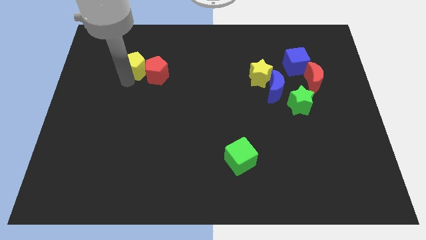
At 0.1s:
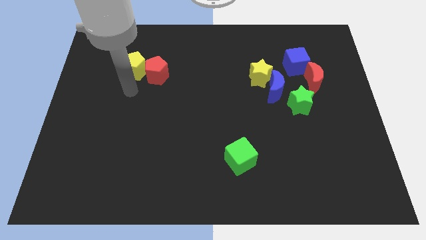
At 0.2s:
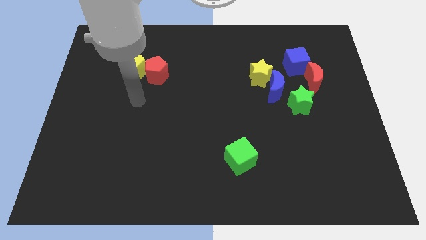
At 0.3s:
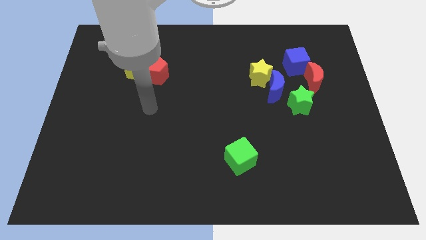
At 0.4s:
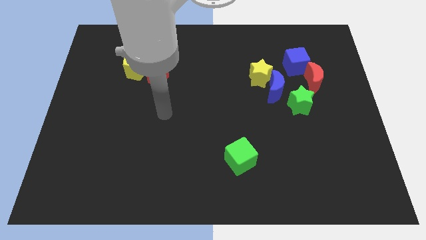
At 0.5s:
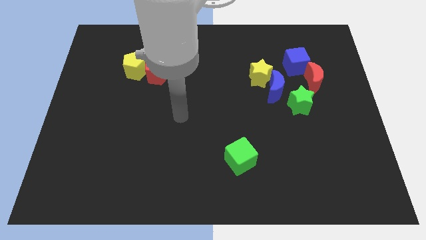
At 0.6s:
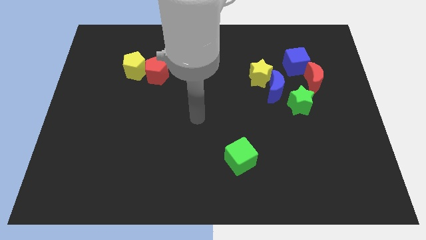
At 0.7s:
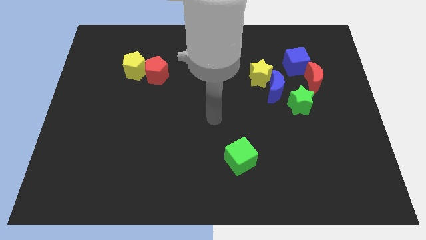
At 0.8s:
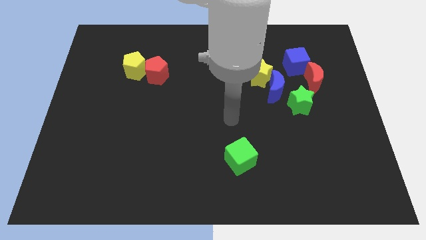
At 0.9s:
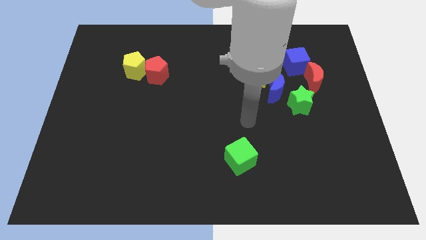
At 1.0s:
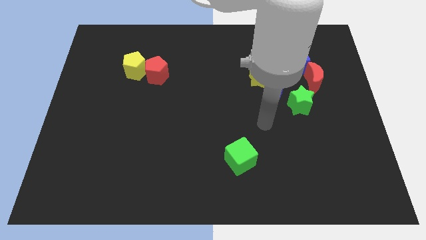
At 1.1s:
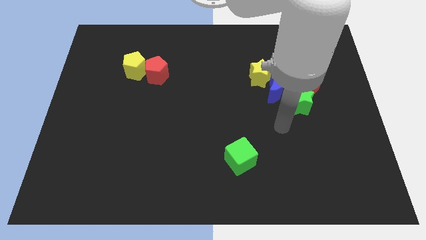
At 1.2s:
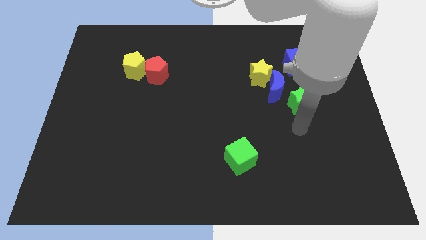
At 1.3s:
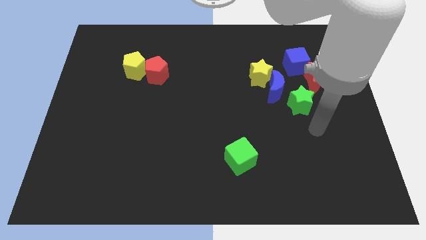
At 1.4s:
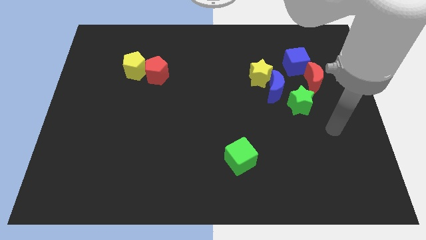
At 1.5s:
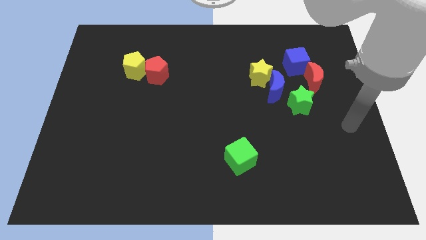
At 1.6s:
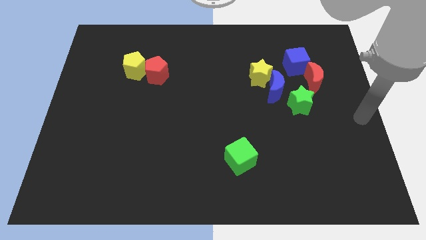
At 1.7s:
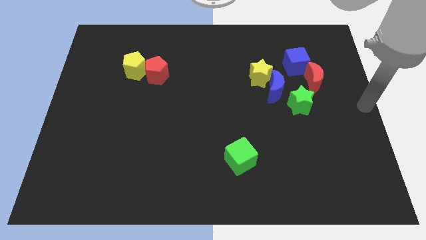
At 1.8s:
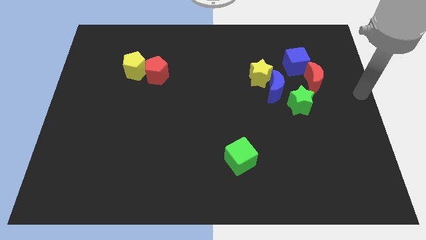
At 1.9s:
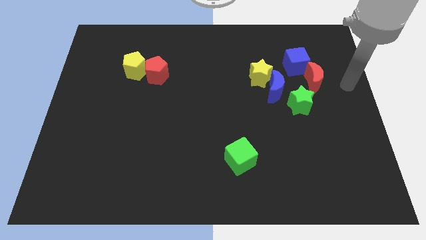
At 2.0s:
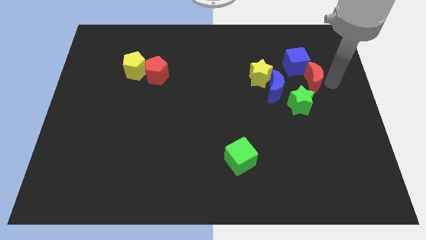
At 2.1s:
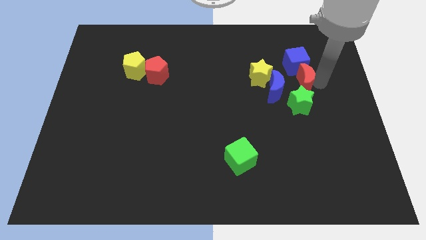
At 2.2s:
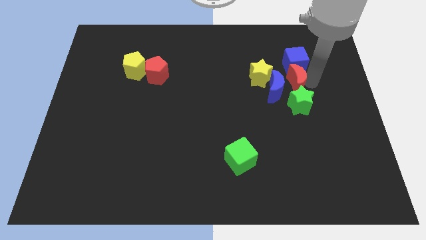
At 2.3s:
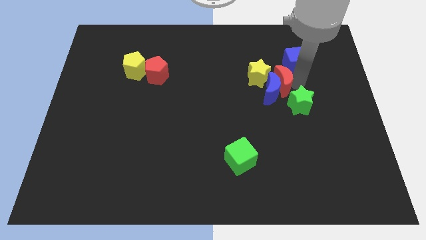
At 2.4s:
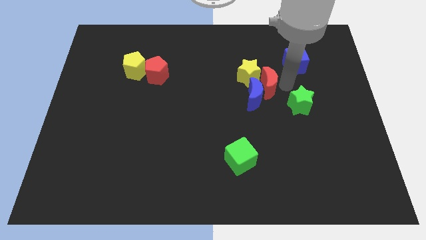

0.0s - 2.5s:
move the arm away from the yellow pentagon

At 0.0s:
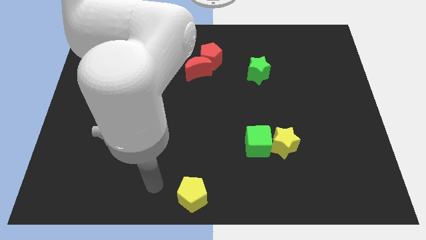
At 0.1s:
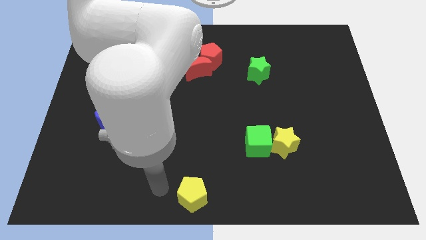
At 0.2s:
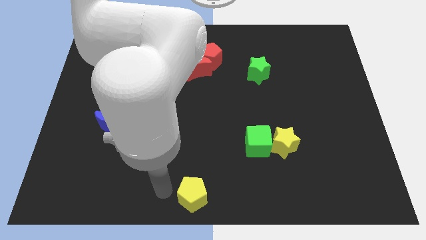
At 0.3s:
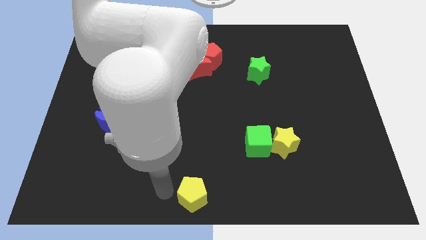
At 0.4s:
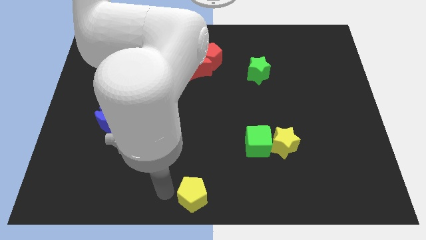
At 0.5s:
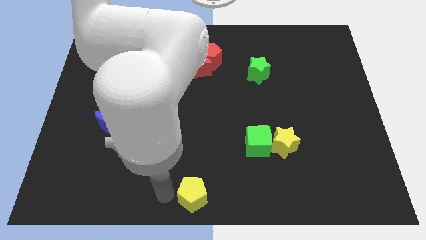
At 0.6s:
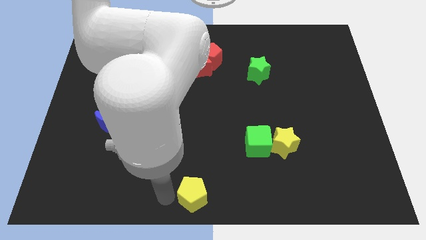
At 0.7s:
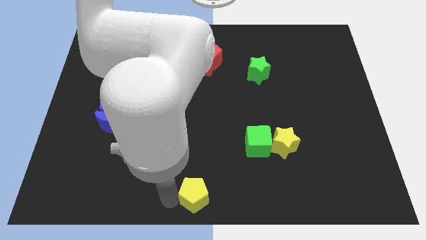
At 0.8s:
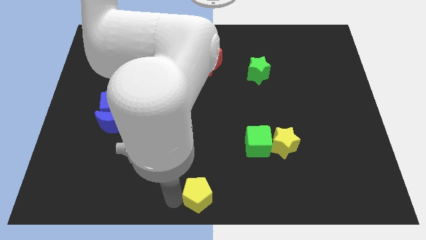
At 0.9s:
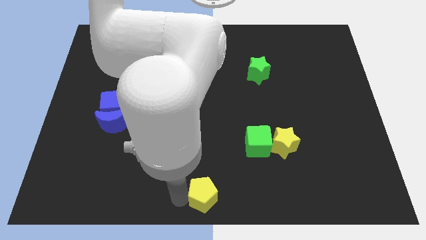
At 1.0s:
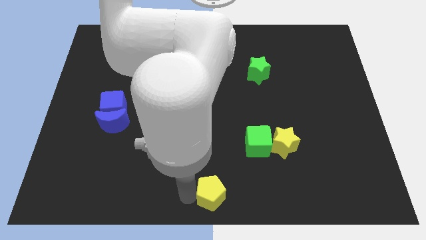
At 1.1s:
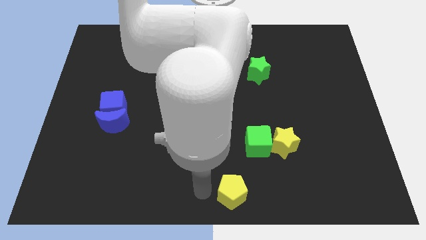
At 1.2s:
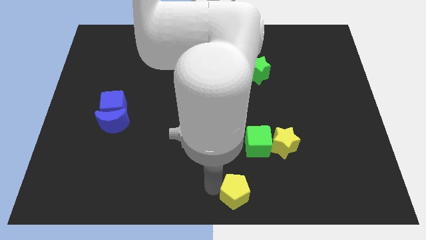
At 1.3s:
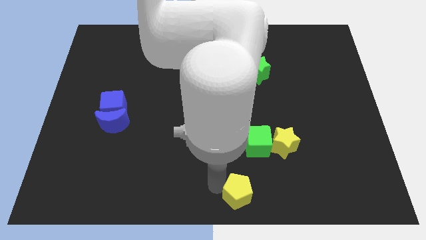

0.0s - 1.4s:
move the yellow pentagon diagonally bottom right to the red blocks

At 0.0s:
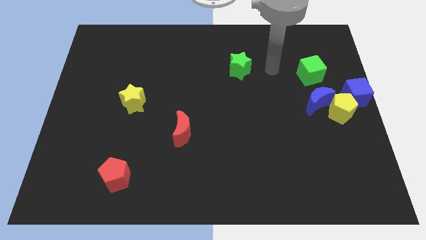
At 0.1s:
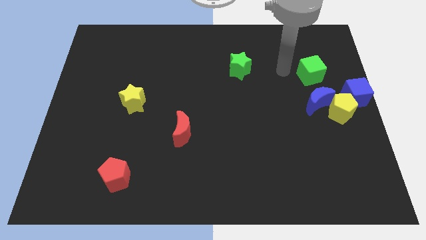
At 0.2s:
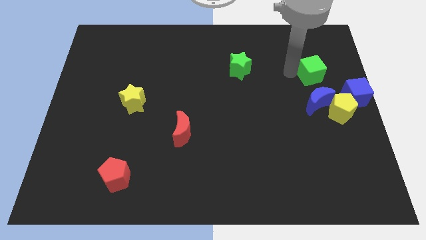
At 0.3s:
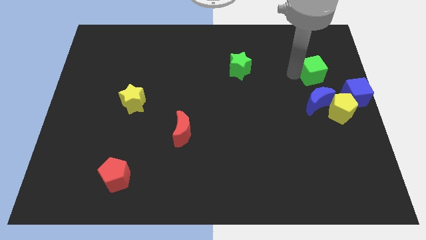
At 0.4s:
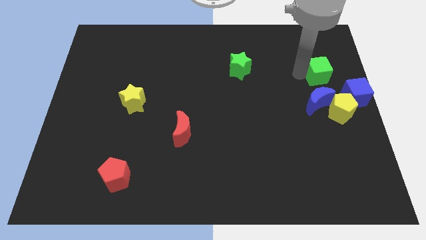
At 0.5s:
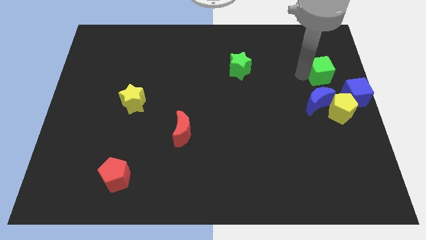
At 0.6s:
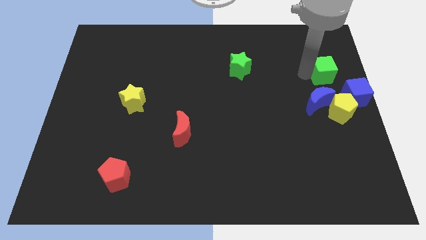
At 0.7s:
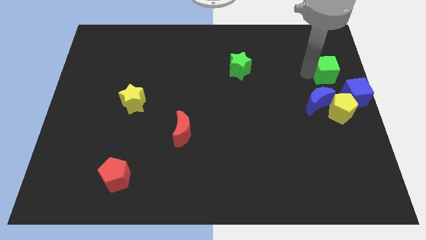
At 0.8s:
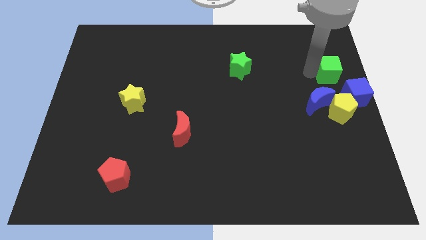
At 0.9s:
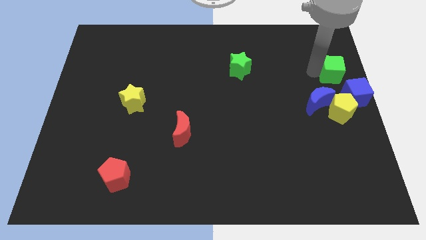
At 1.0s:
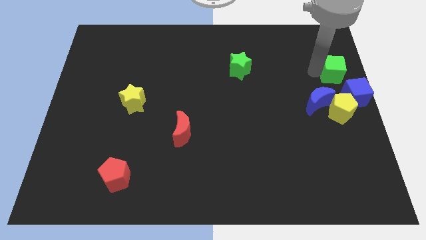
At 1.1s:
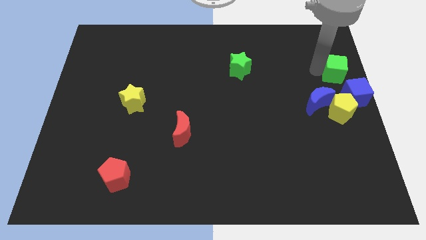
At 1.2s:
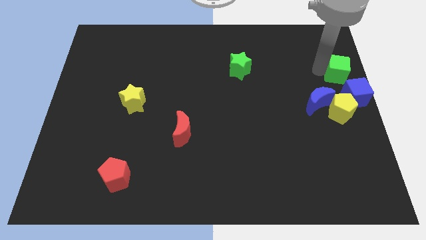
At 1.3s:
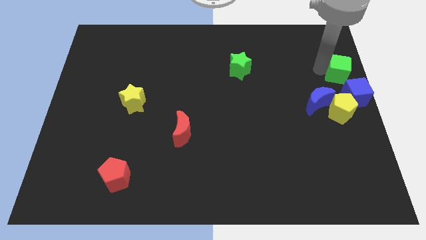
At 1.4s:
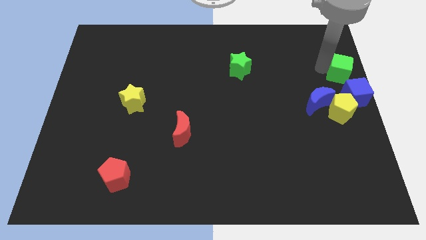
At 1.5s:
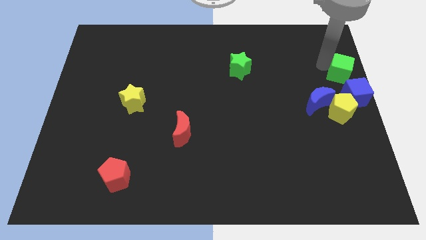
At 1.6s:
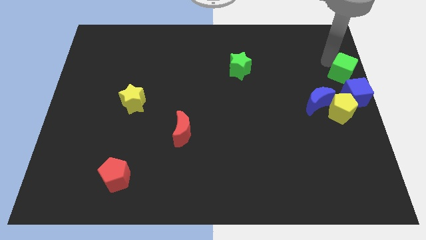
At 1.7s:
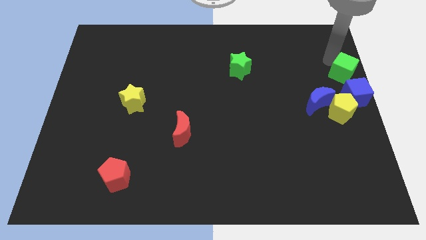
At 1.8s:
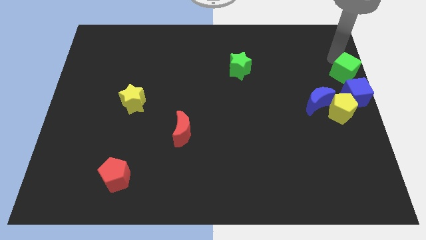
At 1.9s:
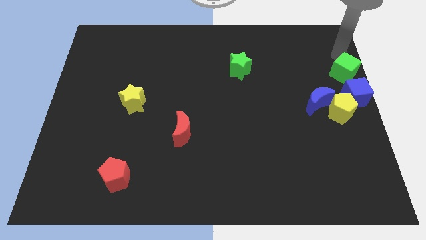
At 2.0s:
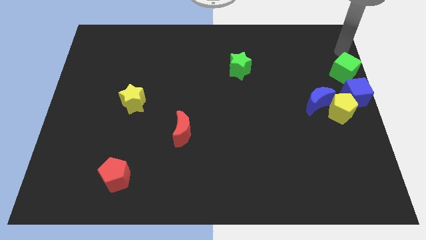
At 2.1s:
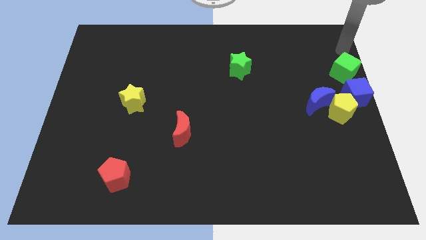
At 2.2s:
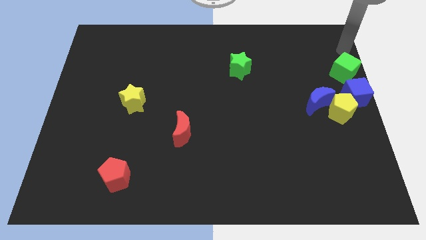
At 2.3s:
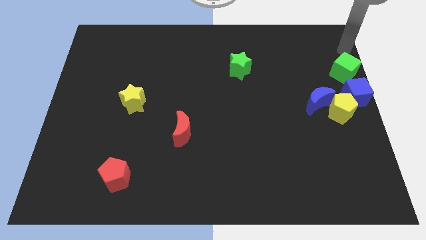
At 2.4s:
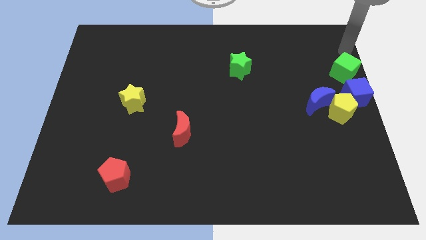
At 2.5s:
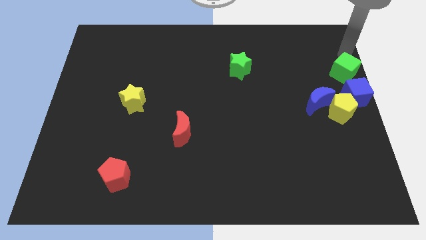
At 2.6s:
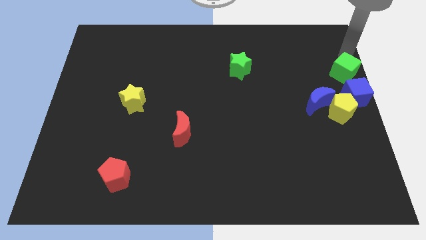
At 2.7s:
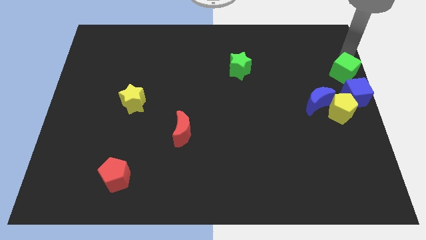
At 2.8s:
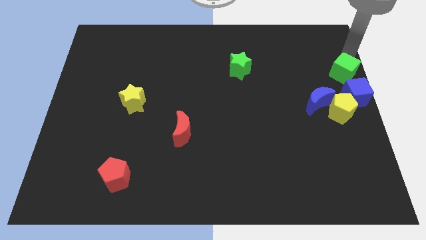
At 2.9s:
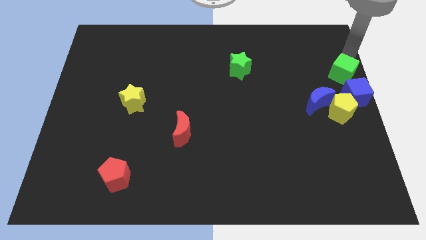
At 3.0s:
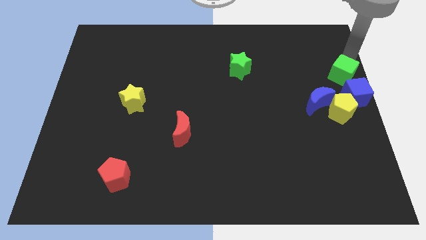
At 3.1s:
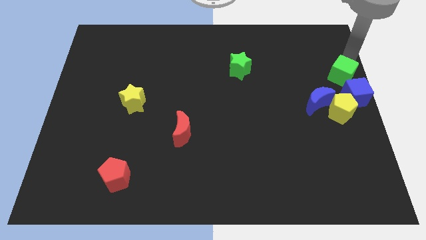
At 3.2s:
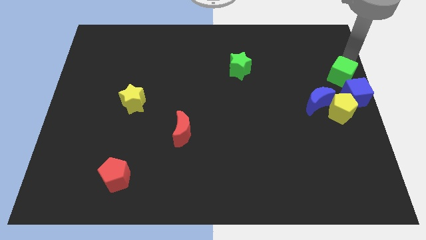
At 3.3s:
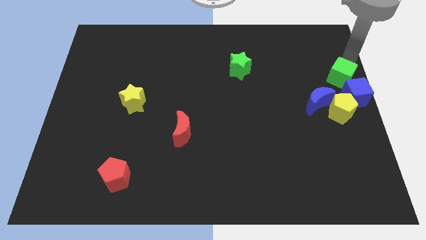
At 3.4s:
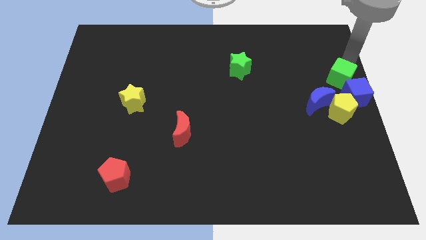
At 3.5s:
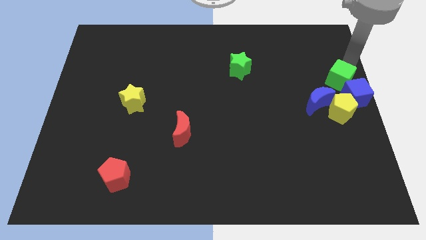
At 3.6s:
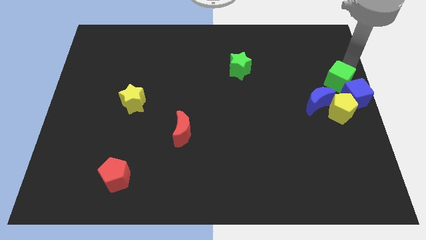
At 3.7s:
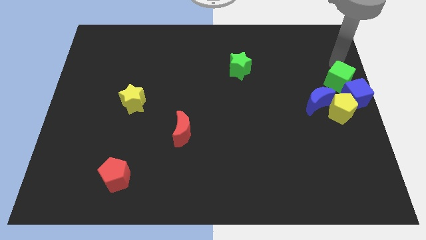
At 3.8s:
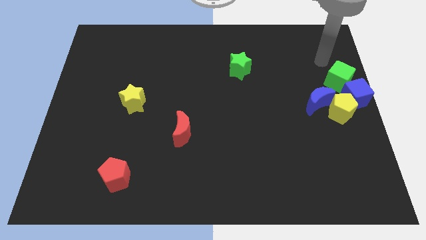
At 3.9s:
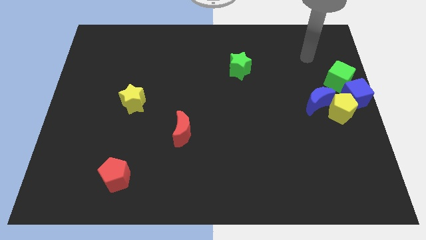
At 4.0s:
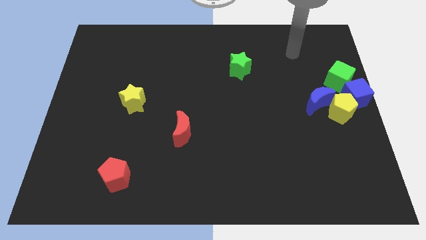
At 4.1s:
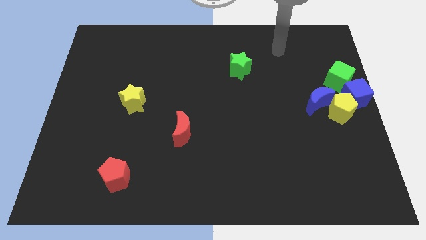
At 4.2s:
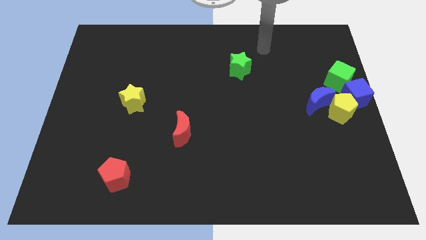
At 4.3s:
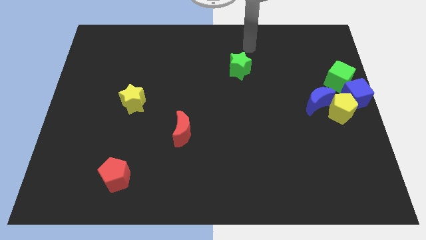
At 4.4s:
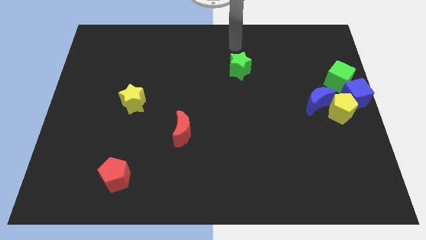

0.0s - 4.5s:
place the green cube above the blue blocks

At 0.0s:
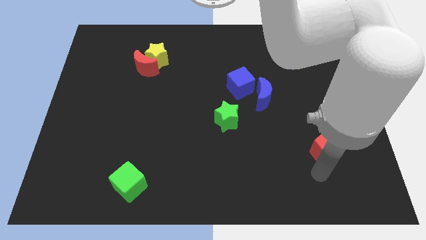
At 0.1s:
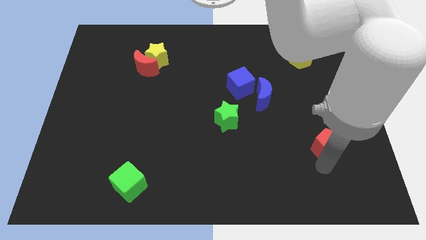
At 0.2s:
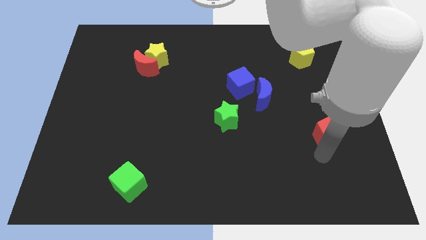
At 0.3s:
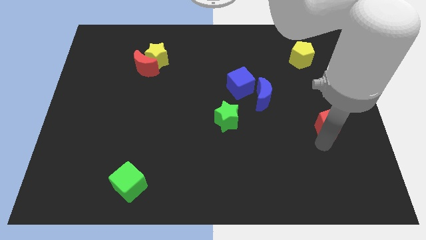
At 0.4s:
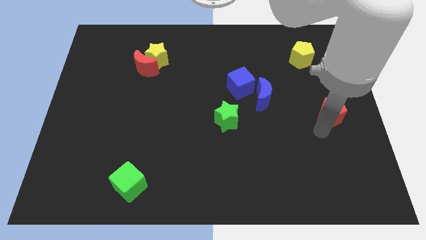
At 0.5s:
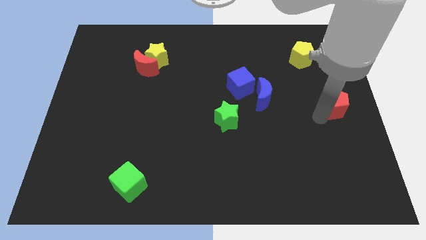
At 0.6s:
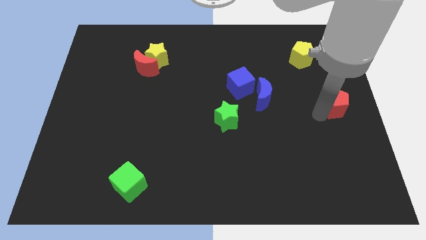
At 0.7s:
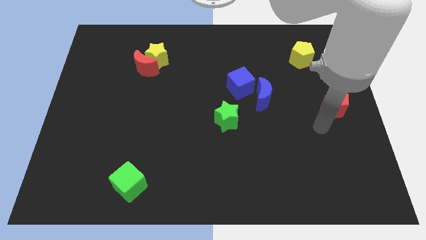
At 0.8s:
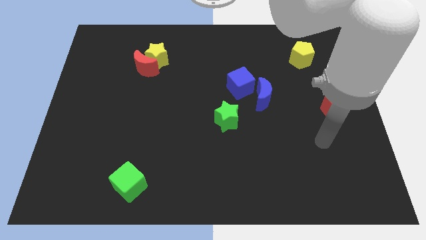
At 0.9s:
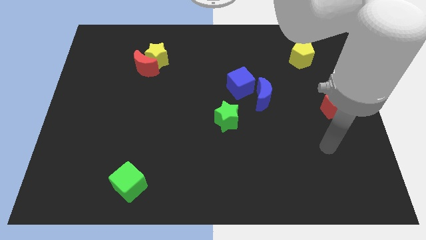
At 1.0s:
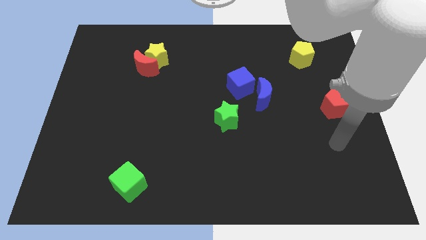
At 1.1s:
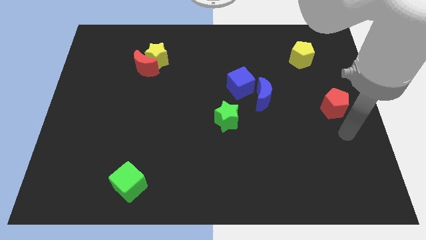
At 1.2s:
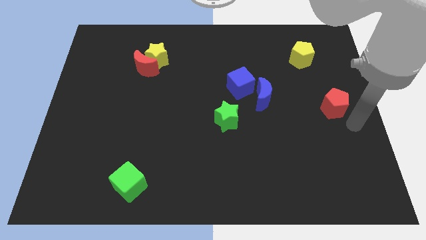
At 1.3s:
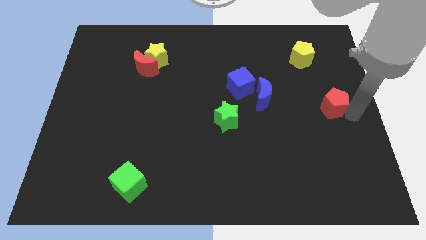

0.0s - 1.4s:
move red pentagon to center right
